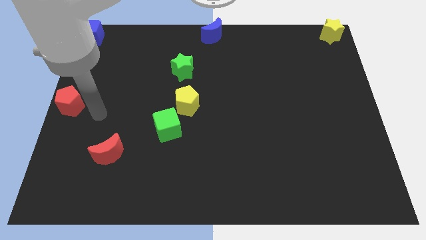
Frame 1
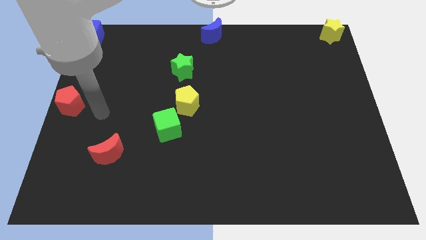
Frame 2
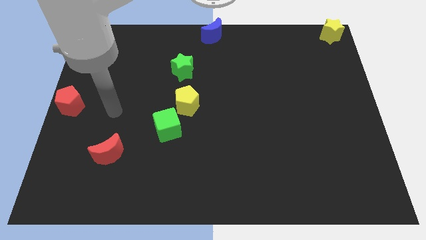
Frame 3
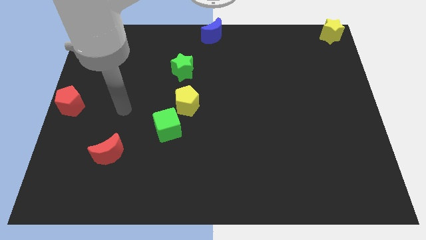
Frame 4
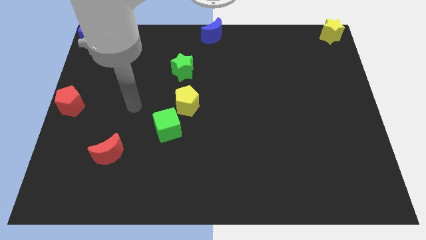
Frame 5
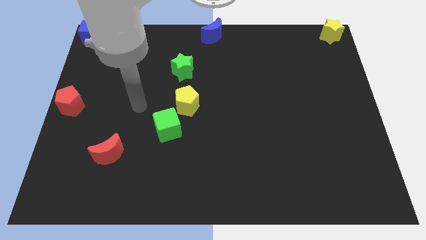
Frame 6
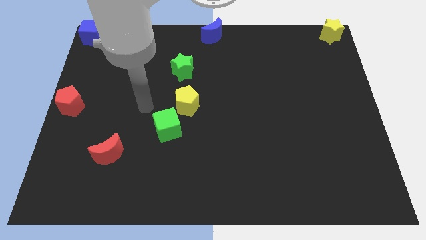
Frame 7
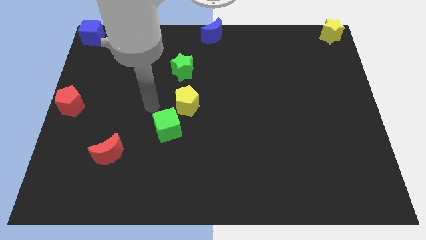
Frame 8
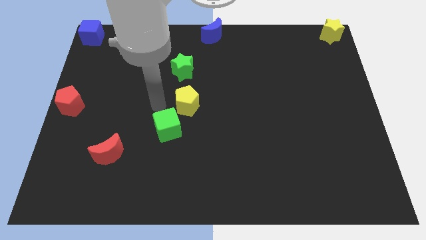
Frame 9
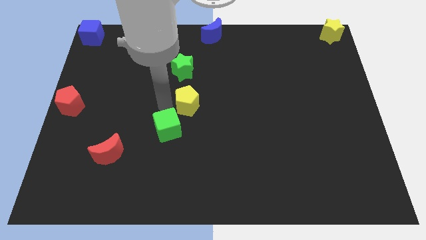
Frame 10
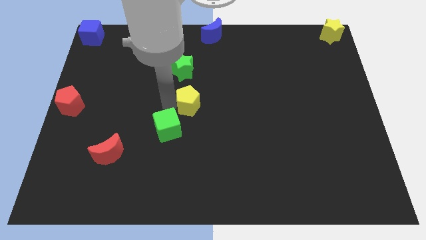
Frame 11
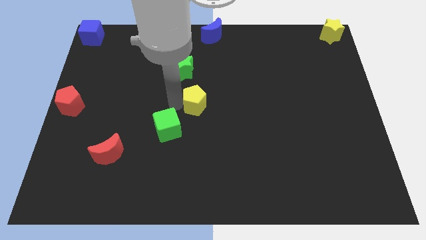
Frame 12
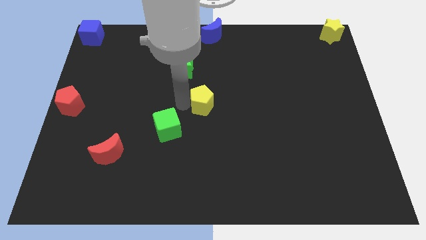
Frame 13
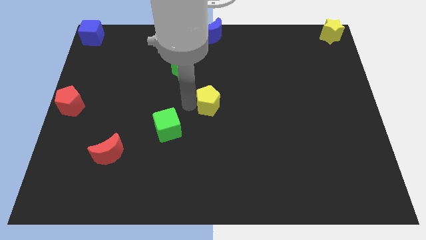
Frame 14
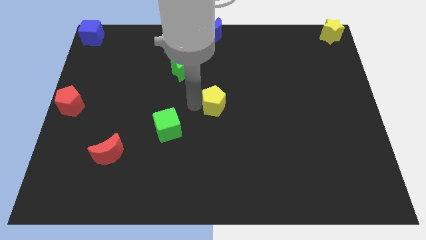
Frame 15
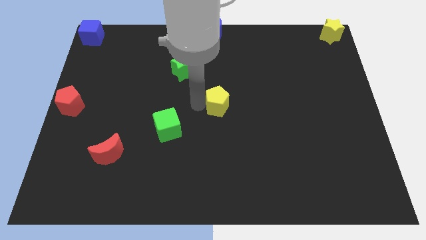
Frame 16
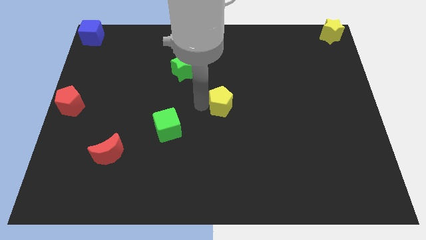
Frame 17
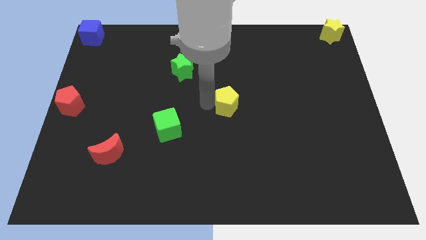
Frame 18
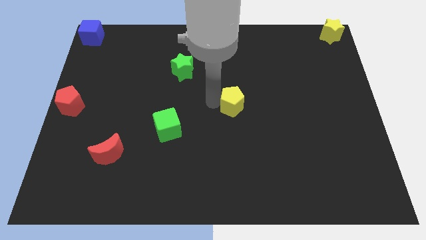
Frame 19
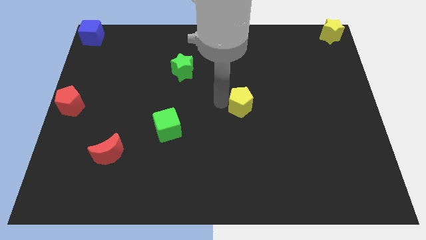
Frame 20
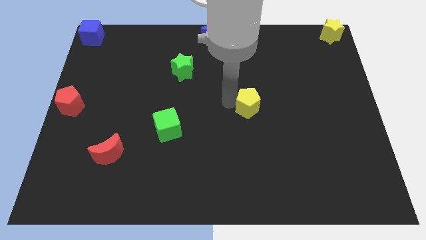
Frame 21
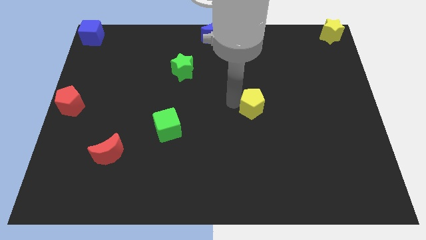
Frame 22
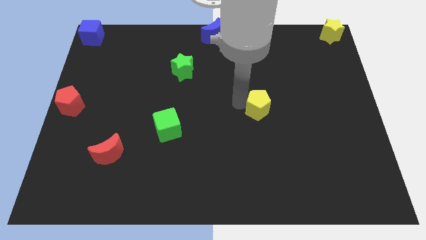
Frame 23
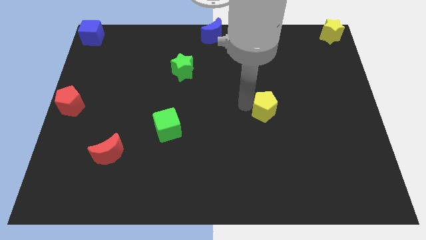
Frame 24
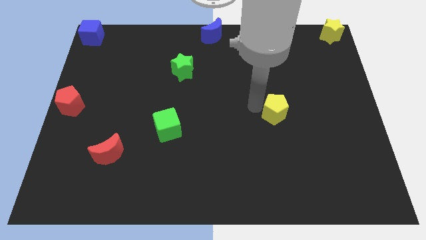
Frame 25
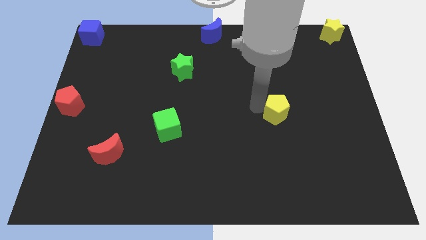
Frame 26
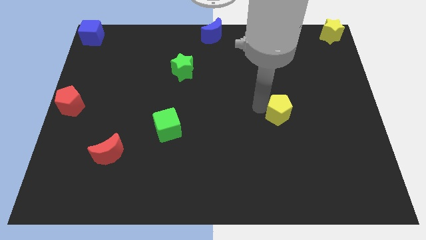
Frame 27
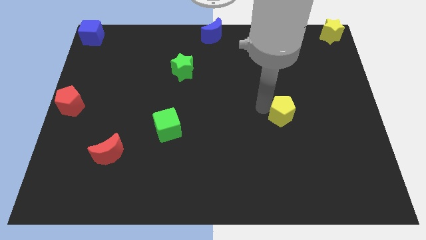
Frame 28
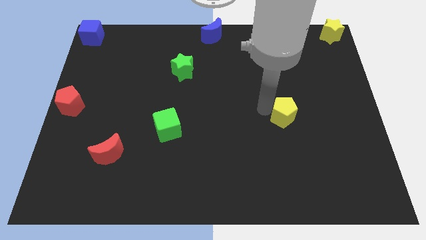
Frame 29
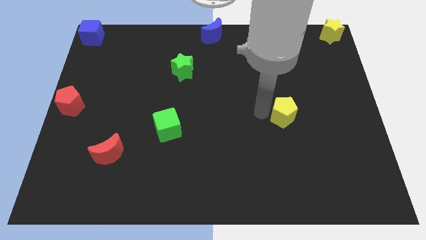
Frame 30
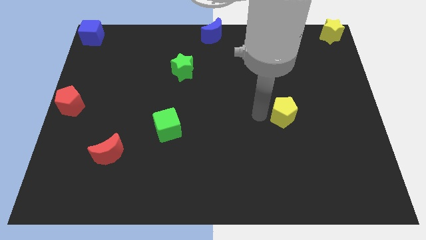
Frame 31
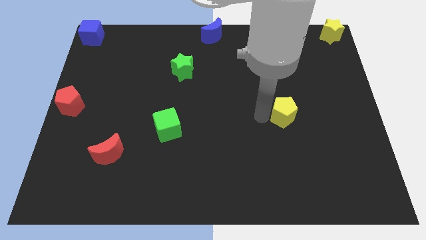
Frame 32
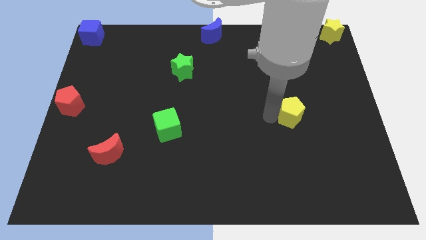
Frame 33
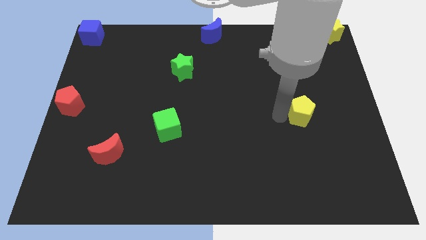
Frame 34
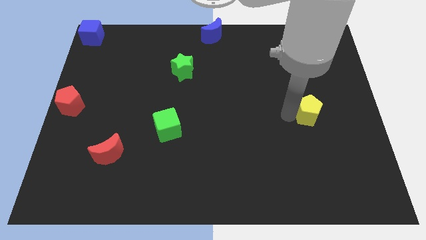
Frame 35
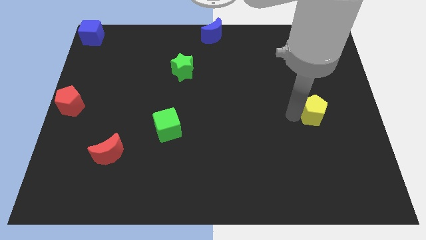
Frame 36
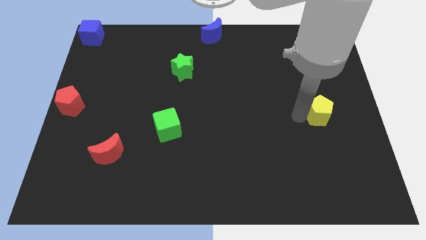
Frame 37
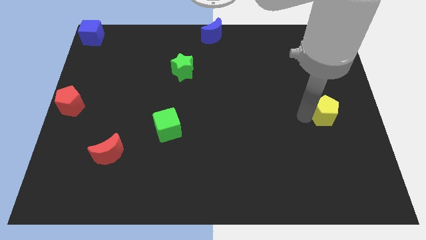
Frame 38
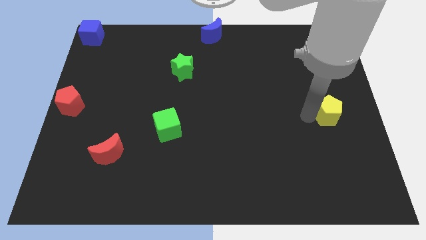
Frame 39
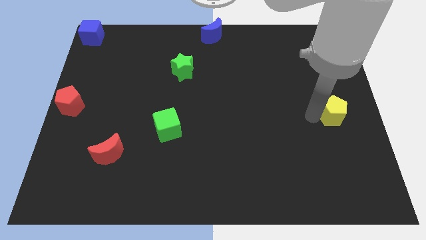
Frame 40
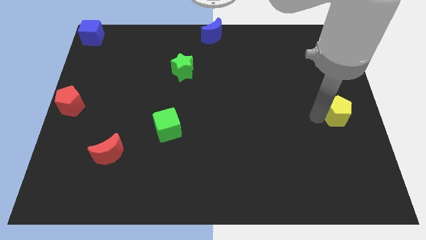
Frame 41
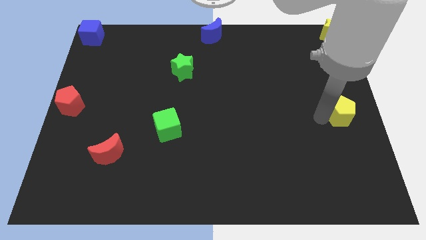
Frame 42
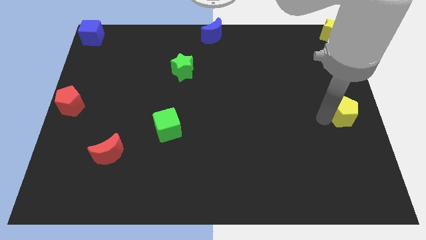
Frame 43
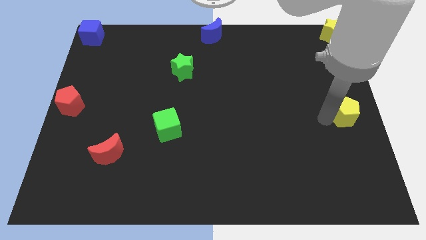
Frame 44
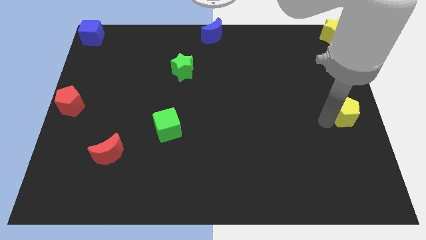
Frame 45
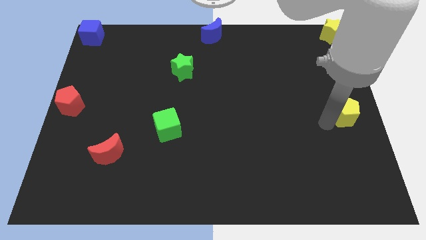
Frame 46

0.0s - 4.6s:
slide the yellow pentagon towards right centre of the board

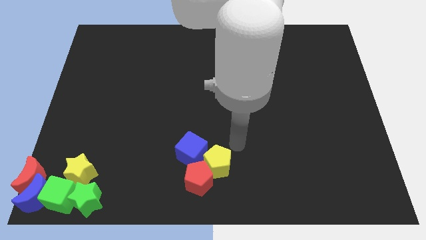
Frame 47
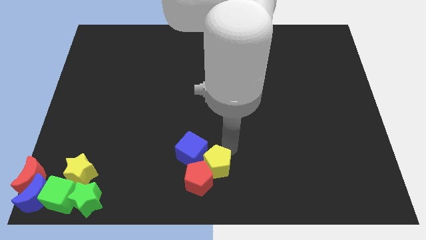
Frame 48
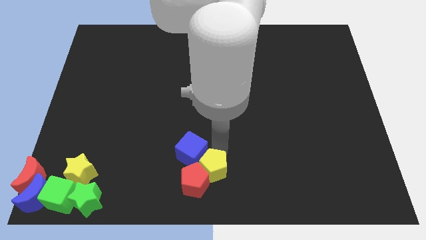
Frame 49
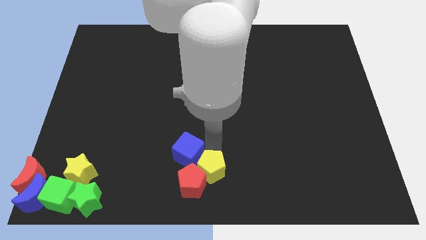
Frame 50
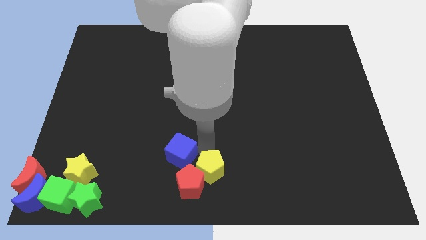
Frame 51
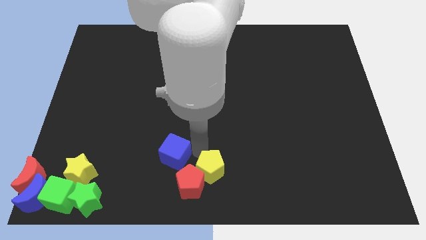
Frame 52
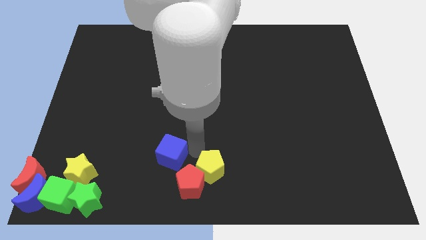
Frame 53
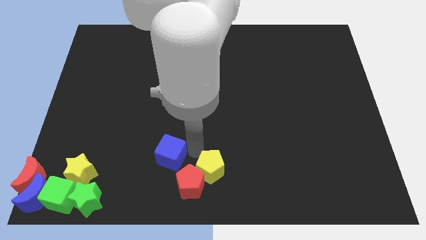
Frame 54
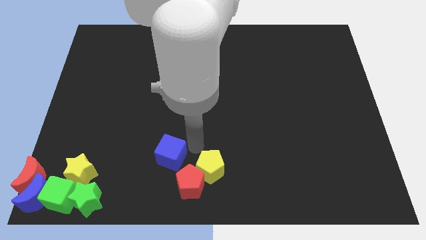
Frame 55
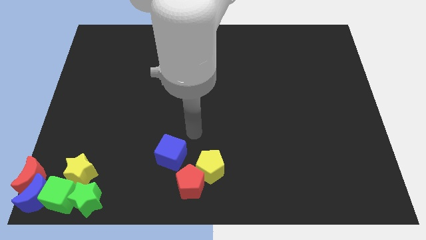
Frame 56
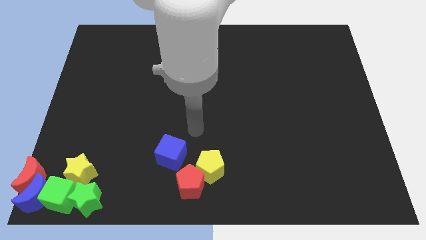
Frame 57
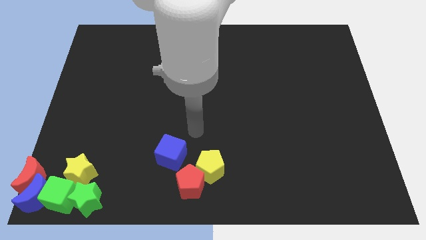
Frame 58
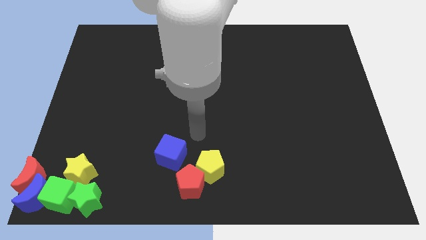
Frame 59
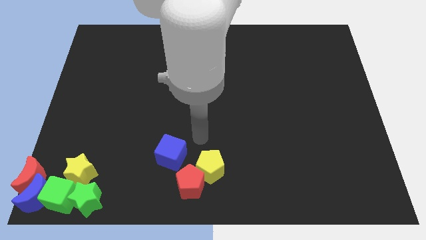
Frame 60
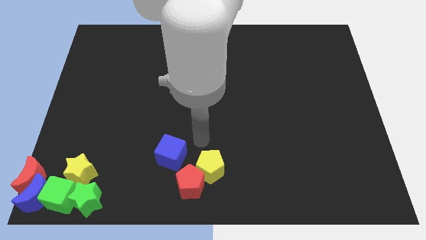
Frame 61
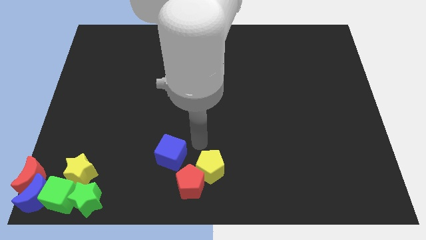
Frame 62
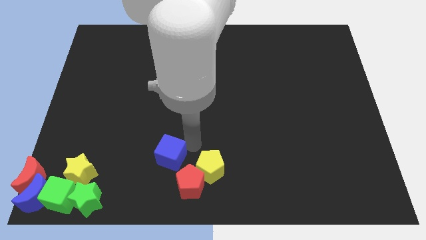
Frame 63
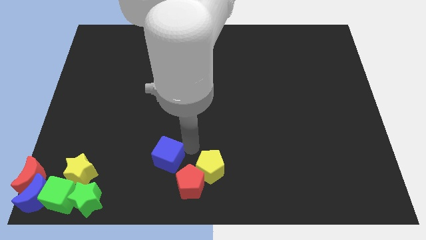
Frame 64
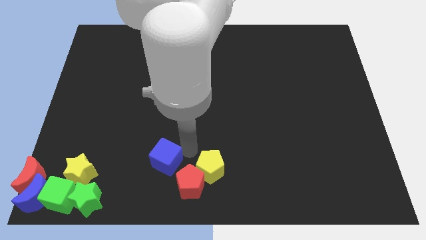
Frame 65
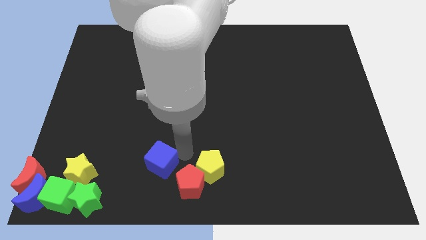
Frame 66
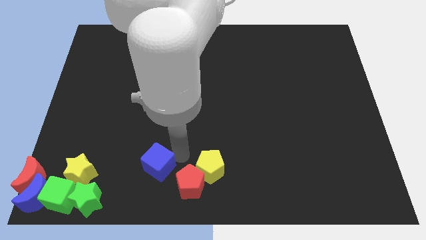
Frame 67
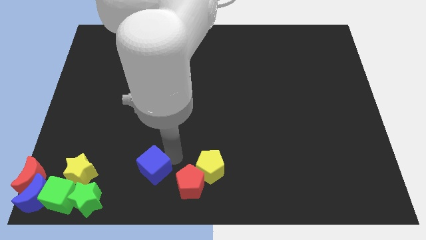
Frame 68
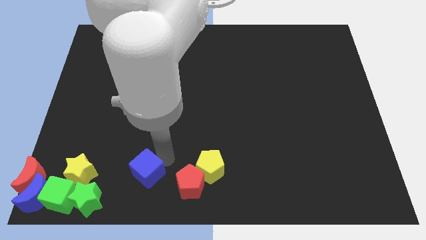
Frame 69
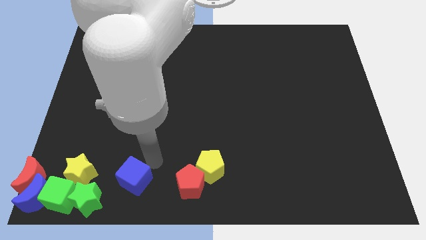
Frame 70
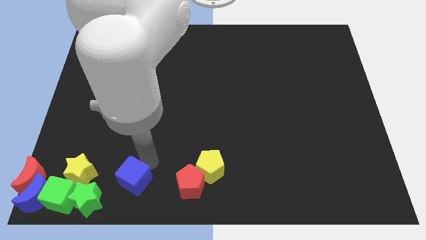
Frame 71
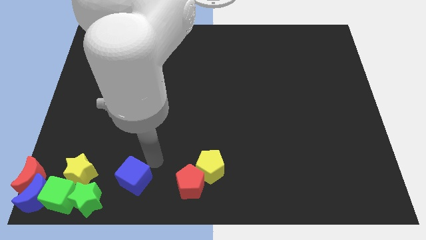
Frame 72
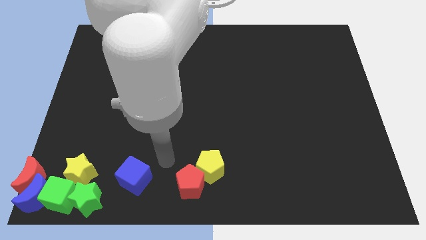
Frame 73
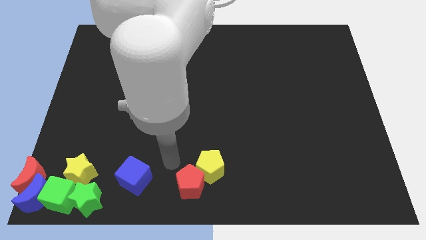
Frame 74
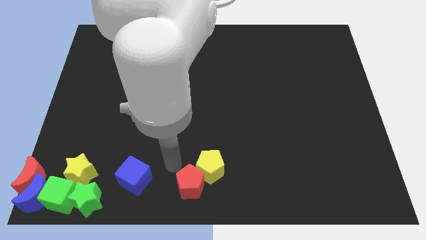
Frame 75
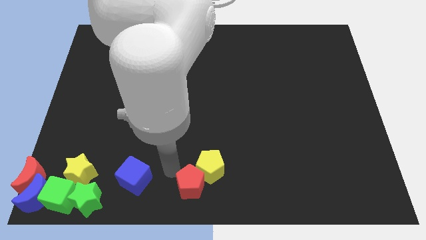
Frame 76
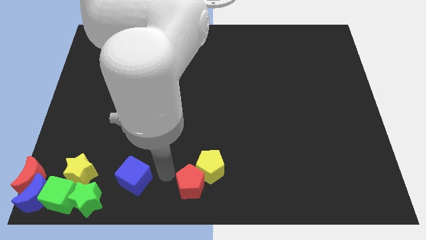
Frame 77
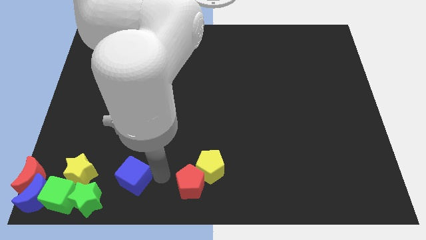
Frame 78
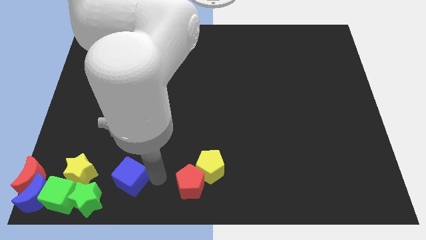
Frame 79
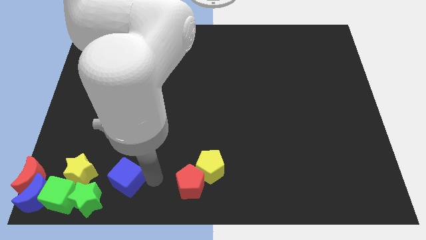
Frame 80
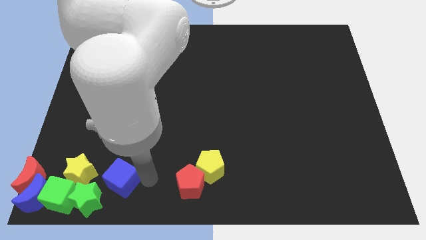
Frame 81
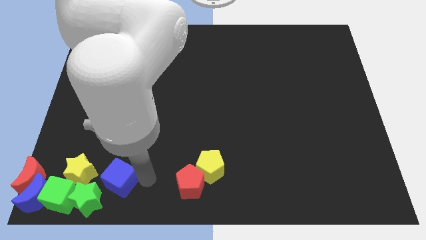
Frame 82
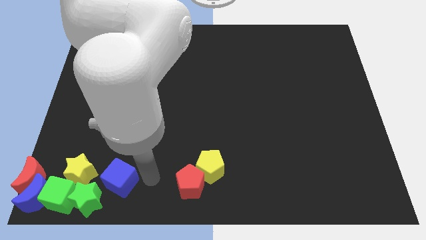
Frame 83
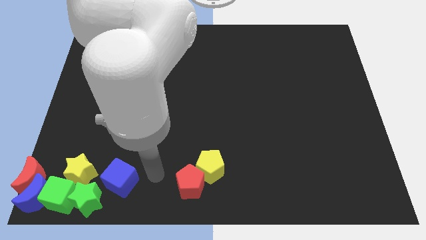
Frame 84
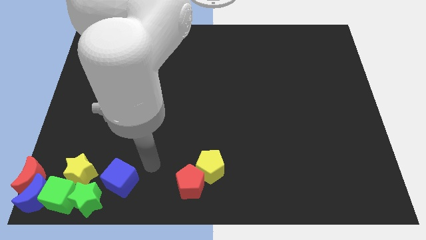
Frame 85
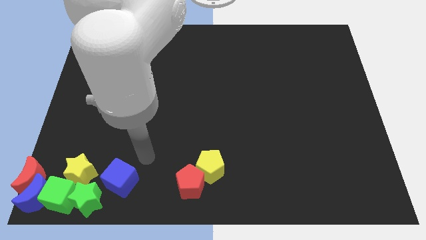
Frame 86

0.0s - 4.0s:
move the blue cube right to the yellow star

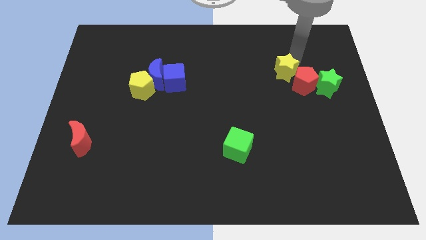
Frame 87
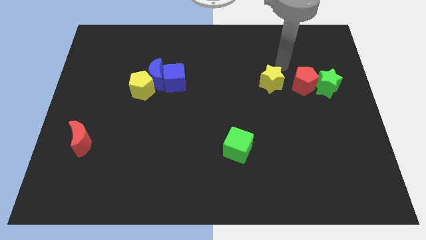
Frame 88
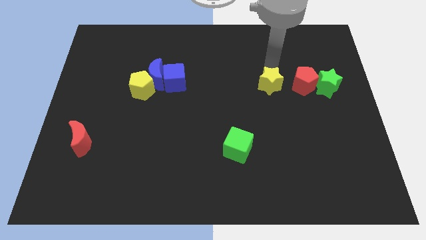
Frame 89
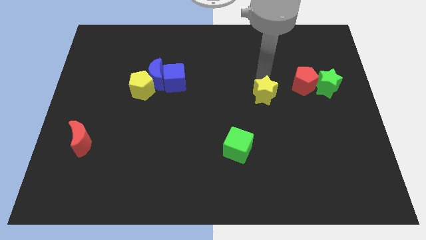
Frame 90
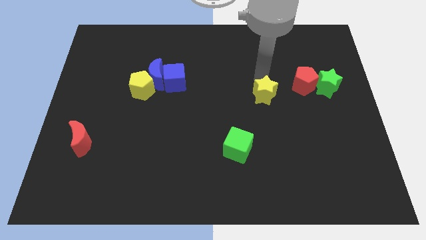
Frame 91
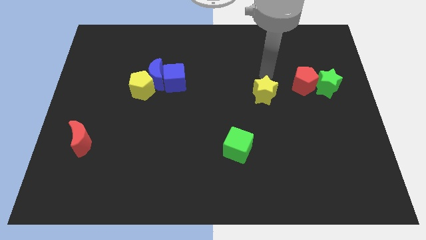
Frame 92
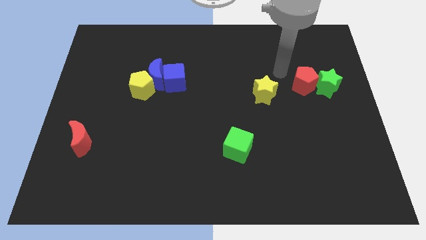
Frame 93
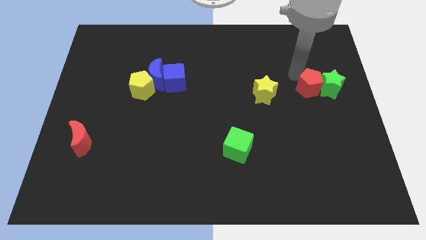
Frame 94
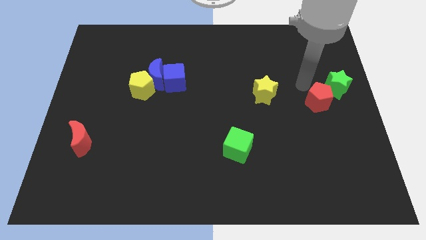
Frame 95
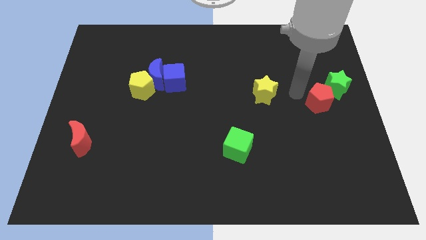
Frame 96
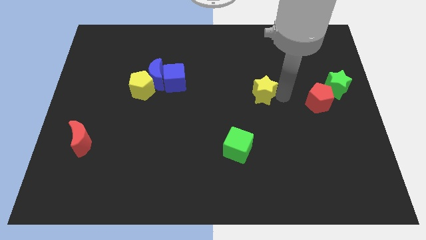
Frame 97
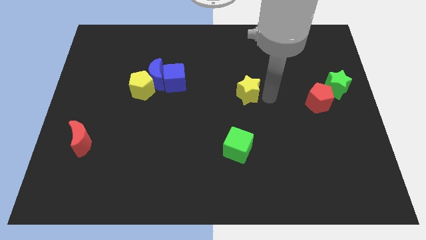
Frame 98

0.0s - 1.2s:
move the yellow star above the green cube
